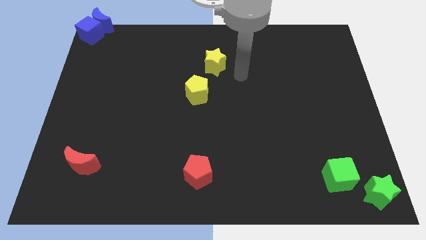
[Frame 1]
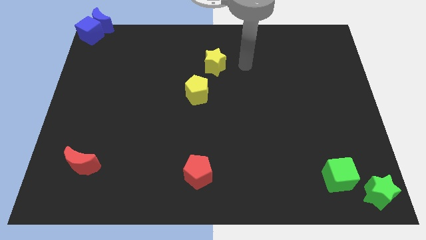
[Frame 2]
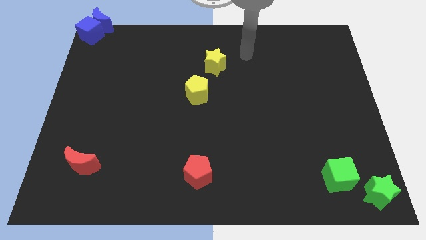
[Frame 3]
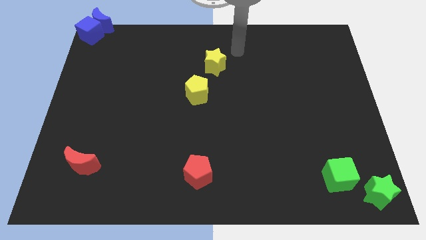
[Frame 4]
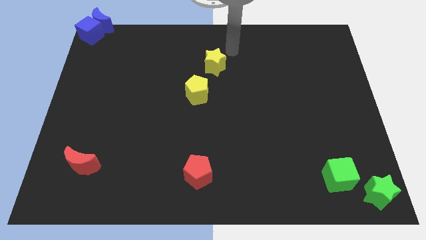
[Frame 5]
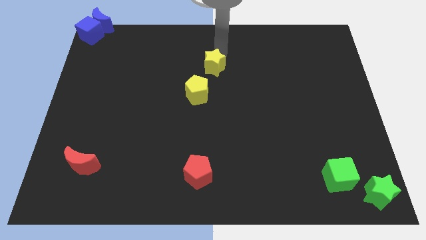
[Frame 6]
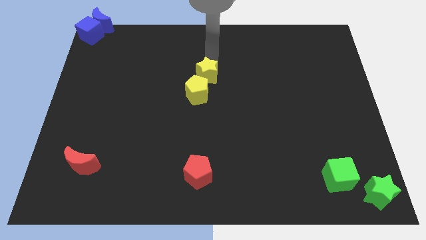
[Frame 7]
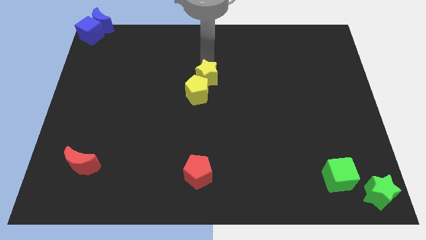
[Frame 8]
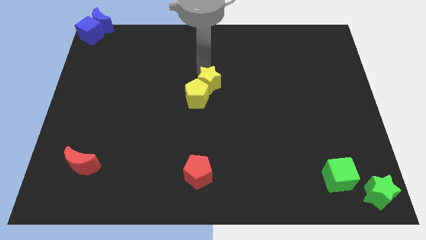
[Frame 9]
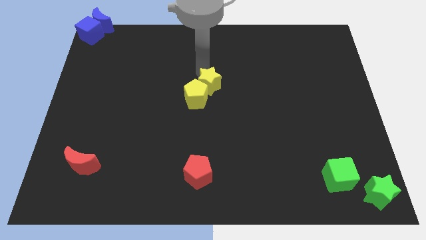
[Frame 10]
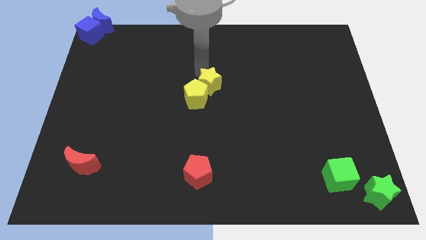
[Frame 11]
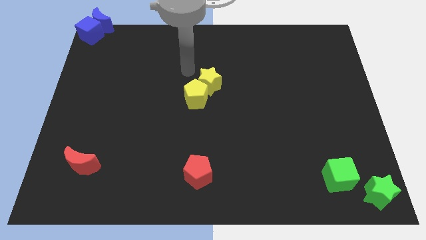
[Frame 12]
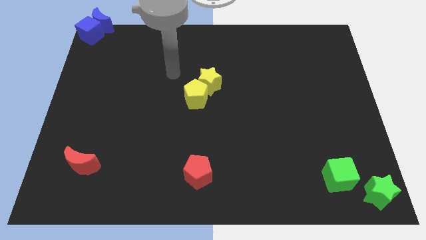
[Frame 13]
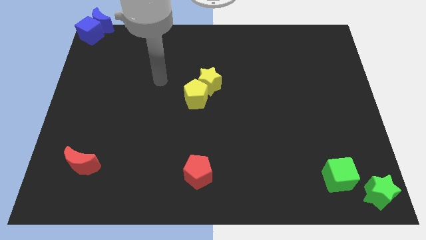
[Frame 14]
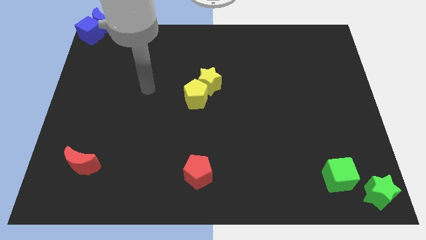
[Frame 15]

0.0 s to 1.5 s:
push the yellow star into the yellow pentagon at the center of the board

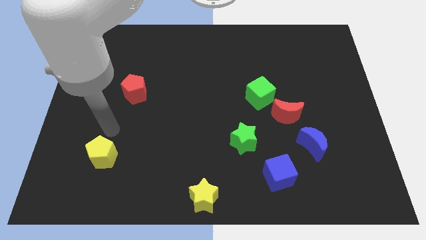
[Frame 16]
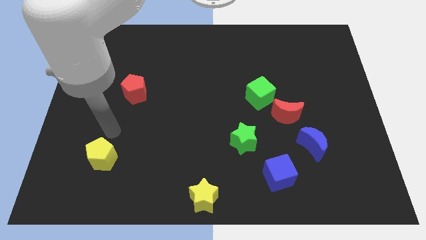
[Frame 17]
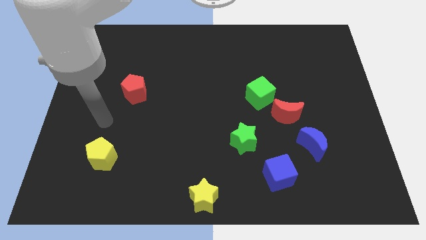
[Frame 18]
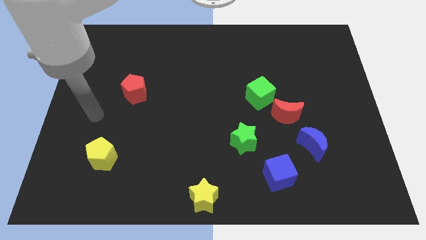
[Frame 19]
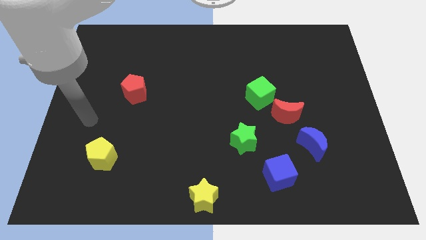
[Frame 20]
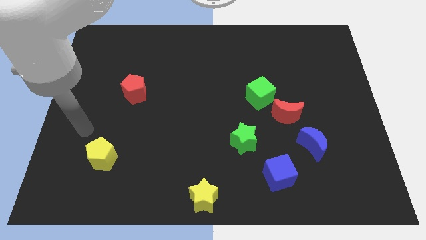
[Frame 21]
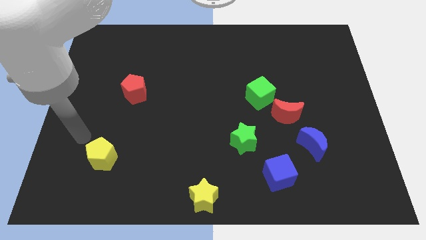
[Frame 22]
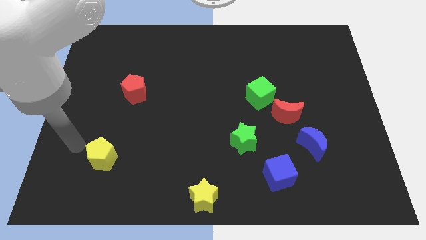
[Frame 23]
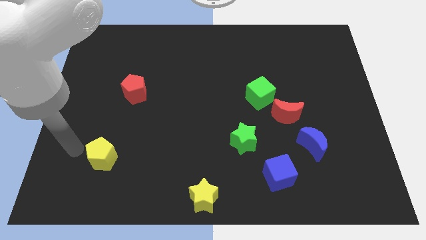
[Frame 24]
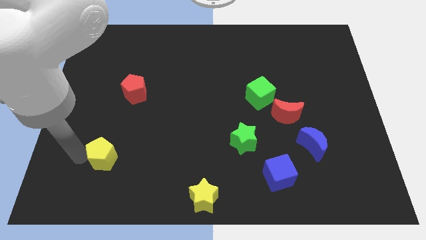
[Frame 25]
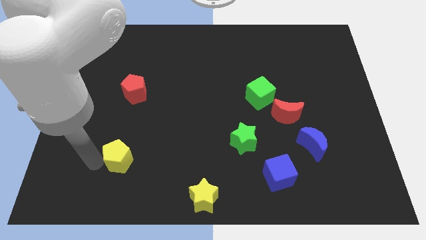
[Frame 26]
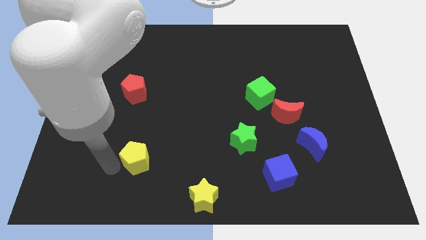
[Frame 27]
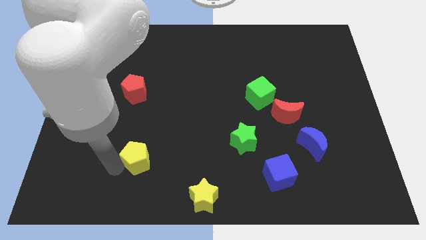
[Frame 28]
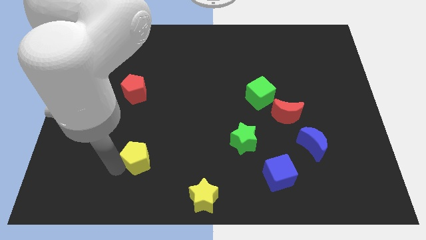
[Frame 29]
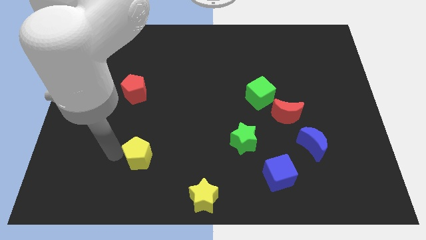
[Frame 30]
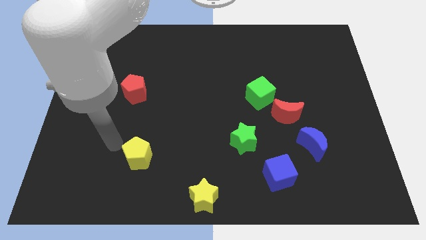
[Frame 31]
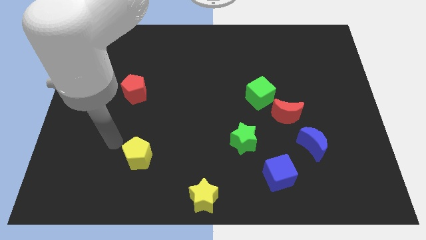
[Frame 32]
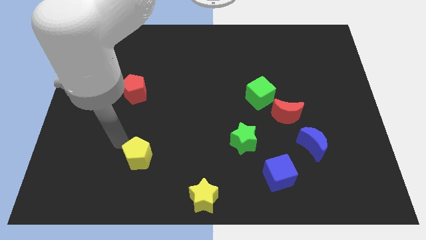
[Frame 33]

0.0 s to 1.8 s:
push the yellow pentagon vertically below the red pentagon

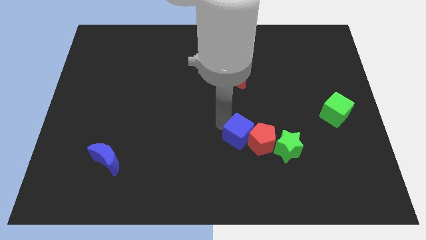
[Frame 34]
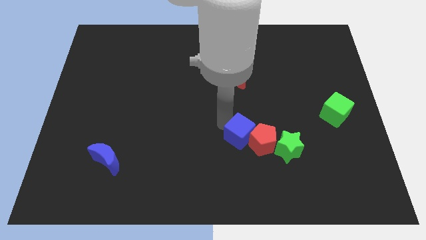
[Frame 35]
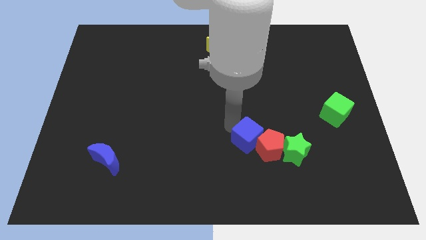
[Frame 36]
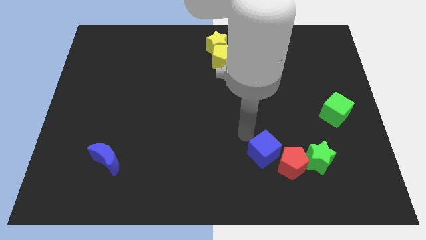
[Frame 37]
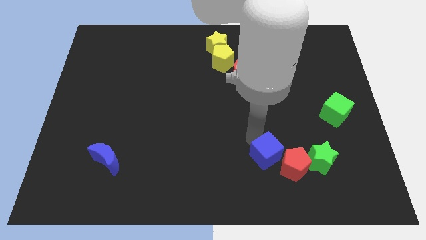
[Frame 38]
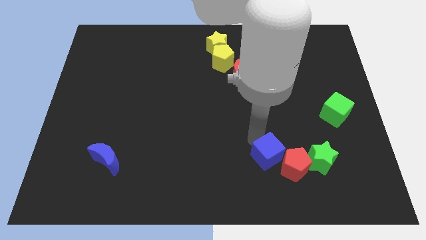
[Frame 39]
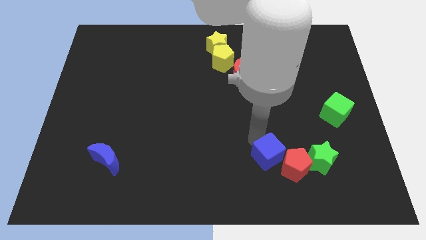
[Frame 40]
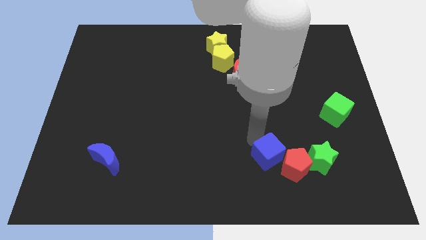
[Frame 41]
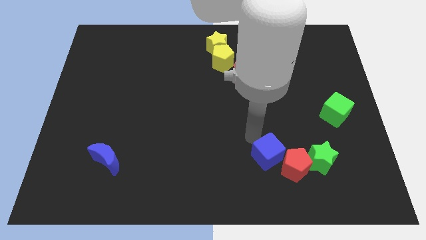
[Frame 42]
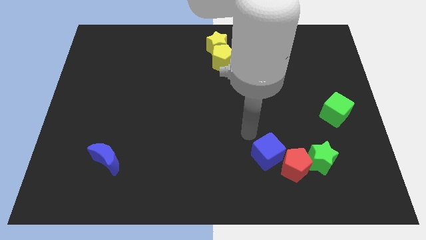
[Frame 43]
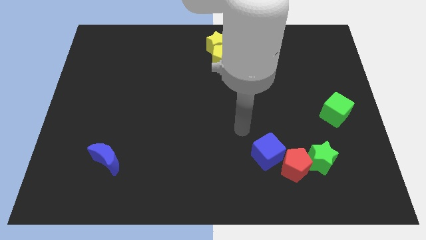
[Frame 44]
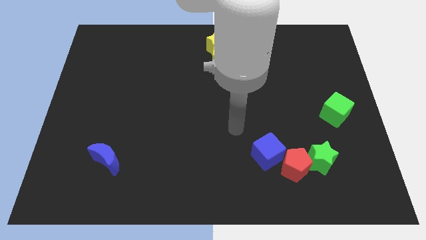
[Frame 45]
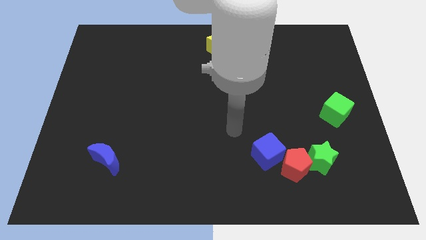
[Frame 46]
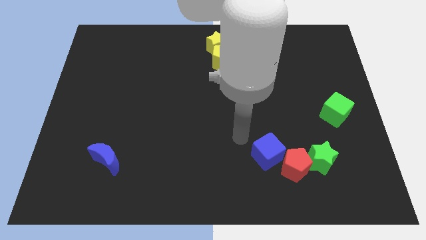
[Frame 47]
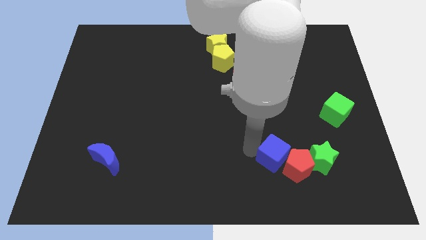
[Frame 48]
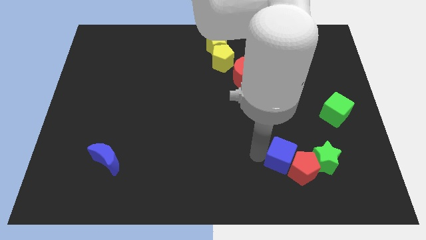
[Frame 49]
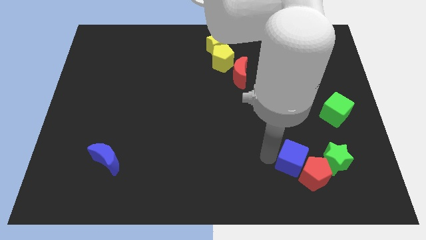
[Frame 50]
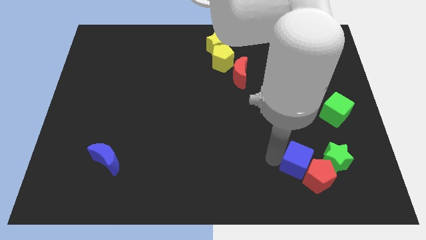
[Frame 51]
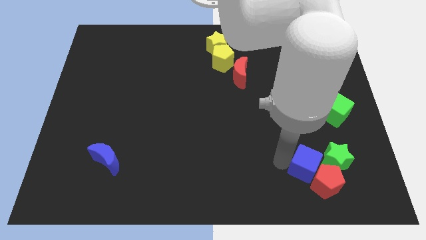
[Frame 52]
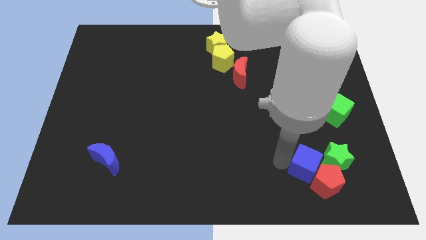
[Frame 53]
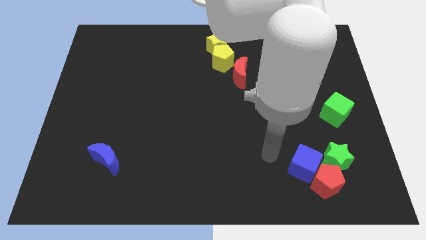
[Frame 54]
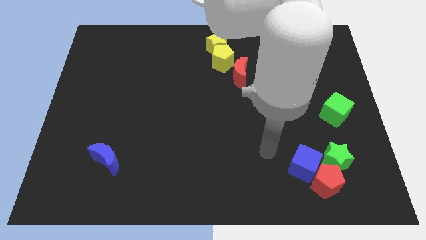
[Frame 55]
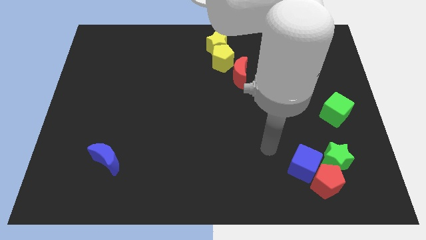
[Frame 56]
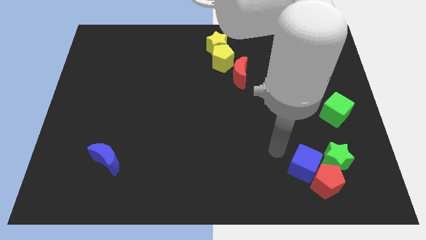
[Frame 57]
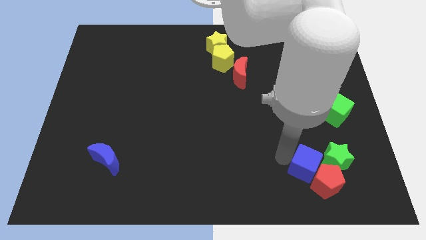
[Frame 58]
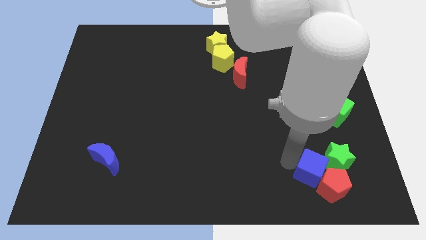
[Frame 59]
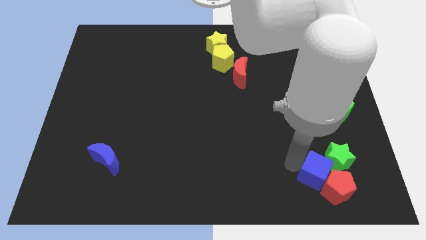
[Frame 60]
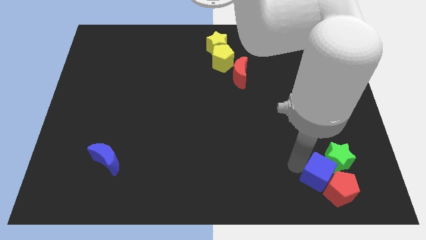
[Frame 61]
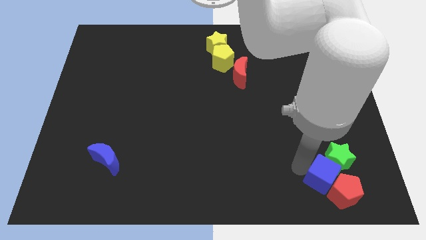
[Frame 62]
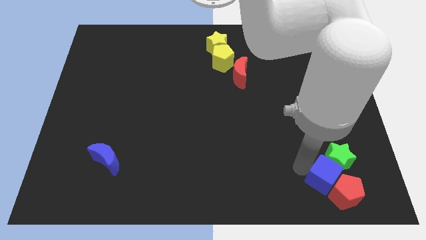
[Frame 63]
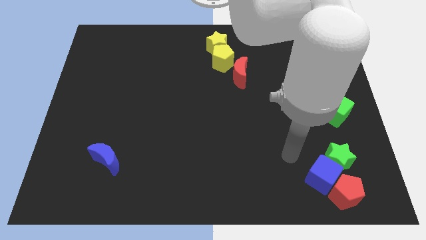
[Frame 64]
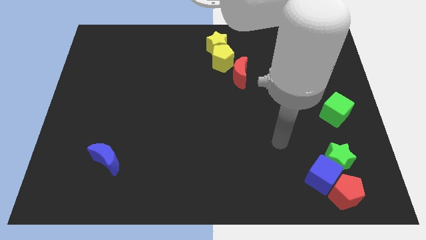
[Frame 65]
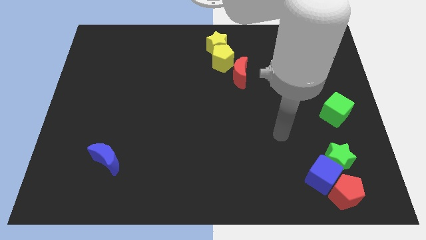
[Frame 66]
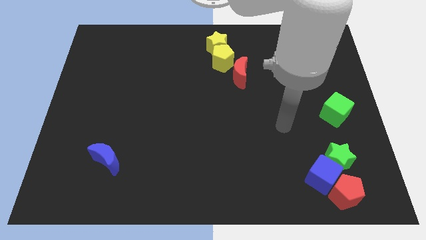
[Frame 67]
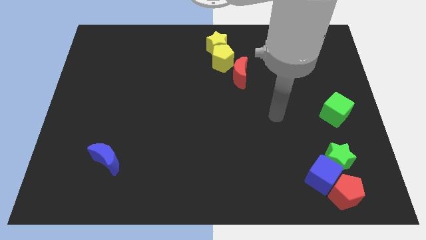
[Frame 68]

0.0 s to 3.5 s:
move a group of green star blue cube and red pentagon

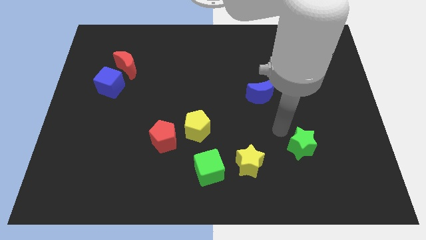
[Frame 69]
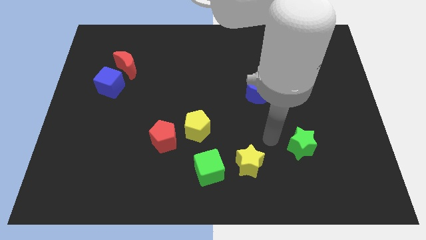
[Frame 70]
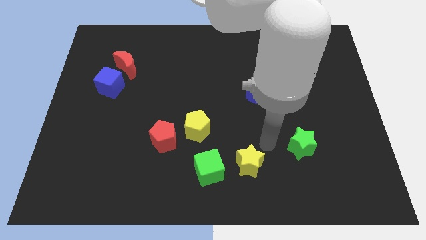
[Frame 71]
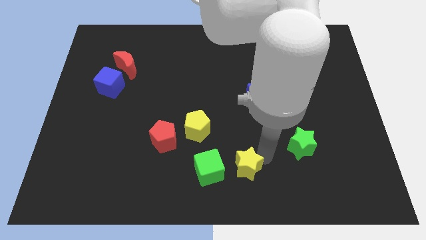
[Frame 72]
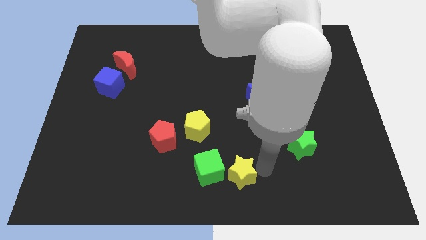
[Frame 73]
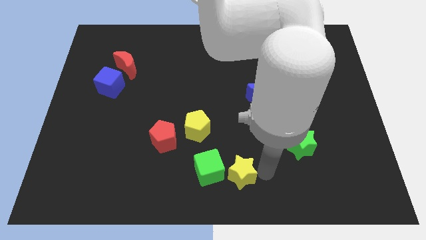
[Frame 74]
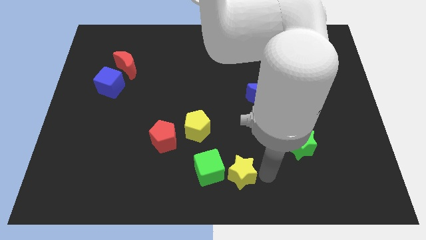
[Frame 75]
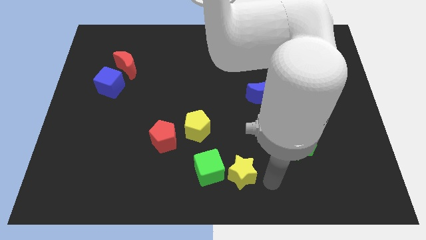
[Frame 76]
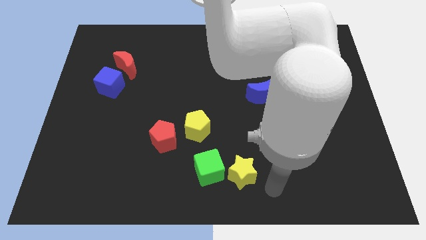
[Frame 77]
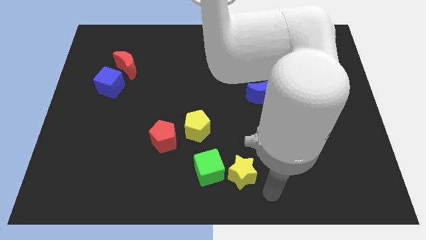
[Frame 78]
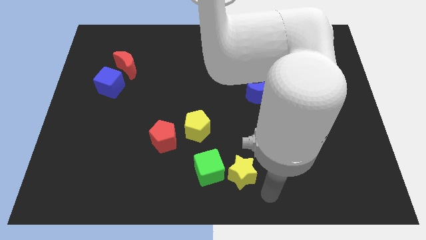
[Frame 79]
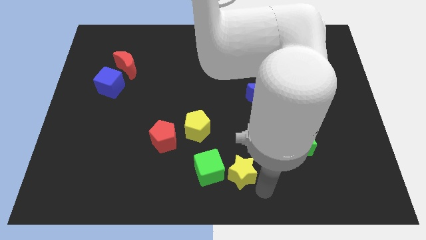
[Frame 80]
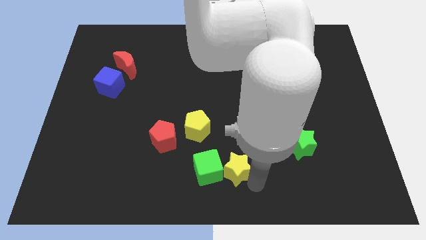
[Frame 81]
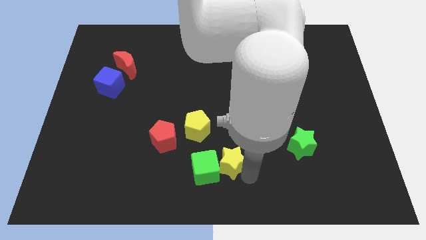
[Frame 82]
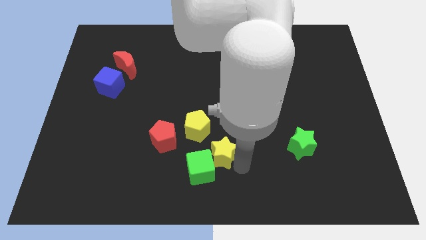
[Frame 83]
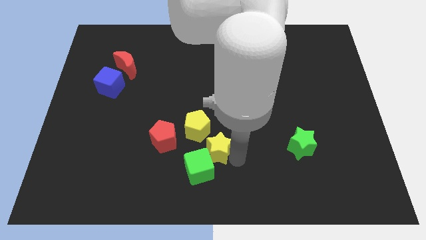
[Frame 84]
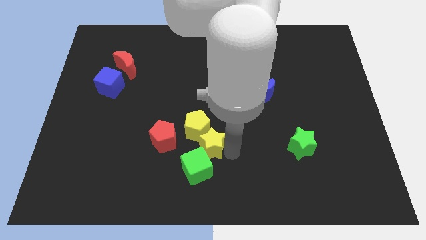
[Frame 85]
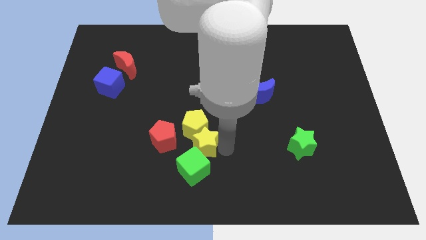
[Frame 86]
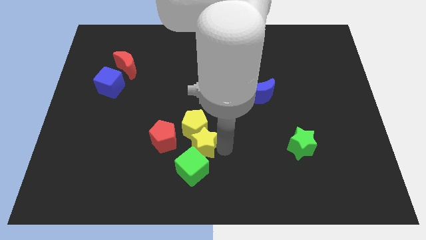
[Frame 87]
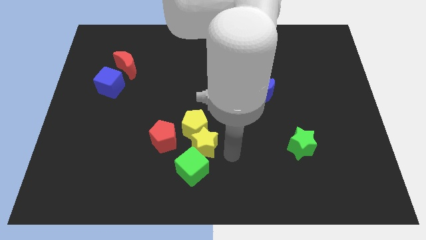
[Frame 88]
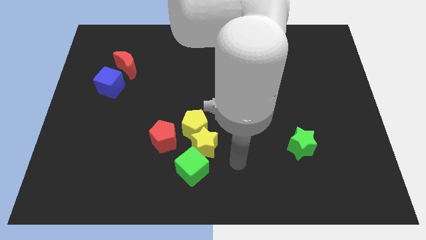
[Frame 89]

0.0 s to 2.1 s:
push the yellow star into the yellow pentagon
